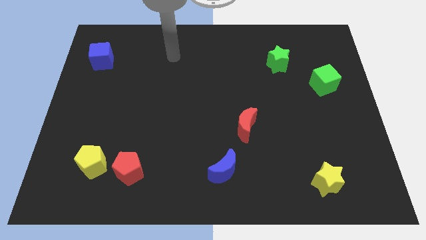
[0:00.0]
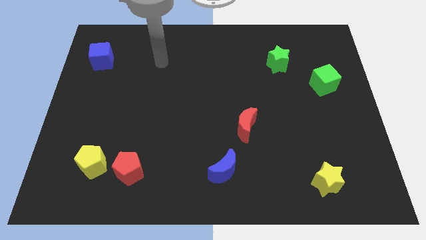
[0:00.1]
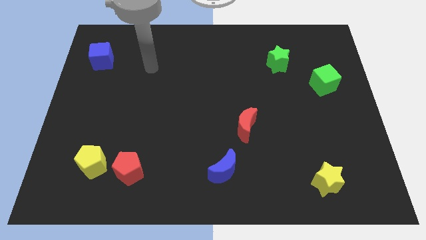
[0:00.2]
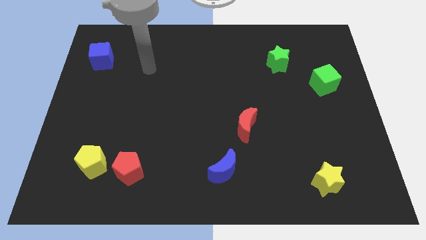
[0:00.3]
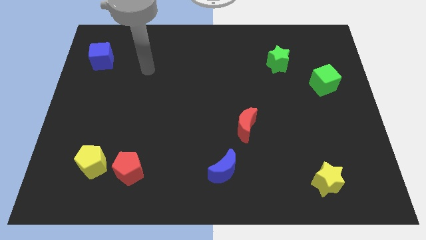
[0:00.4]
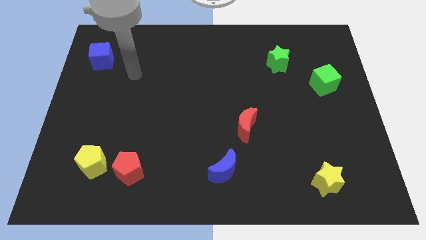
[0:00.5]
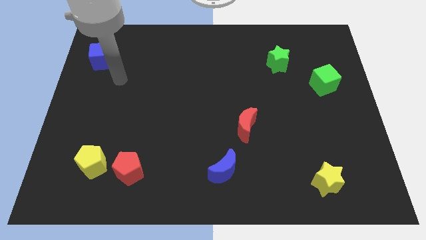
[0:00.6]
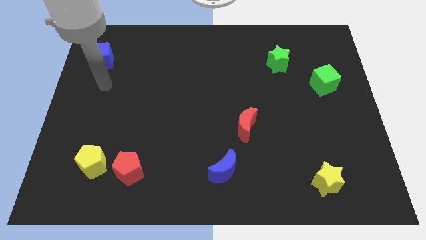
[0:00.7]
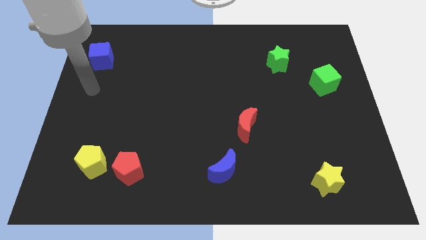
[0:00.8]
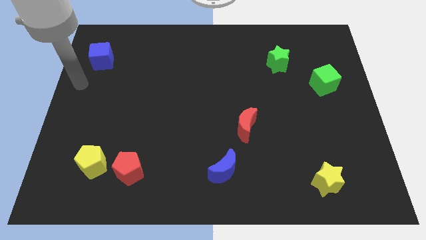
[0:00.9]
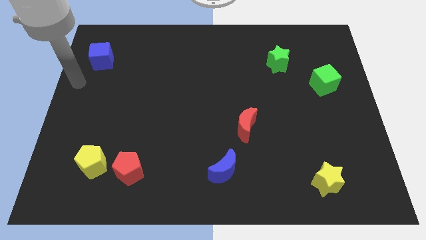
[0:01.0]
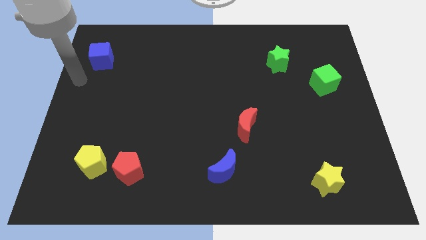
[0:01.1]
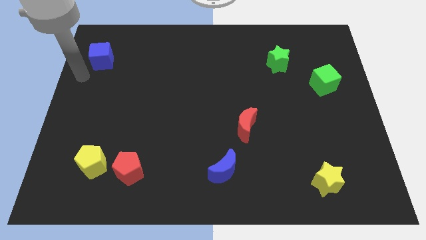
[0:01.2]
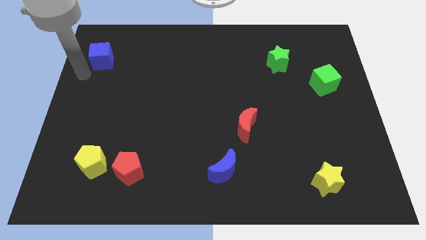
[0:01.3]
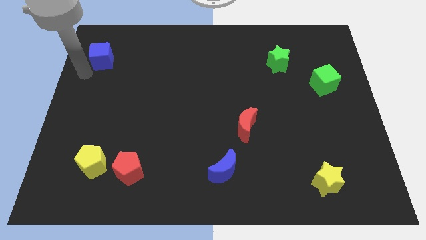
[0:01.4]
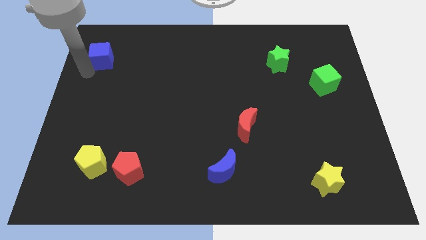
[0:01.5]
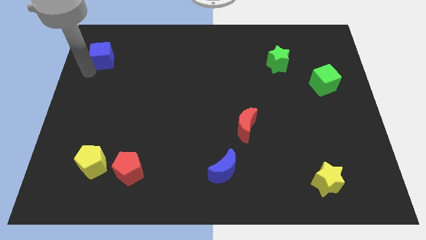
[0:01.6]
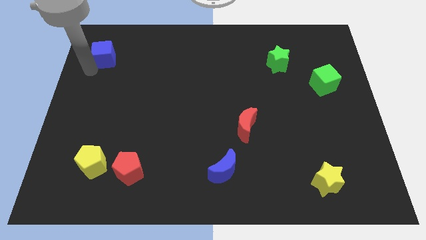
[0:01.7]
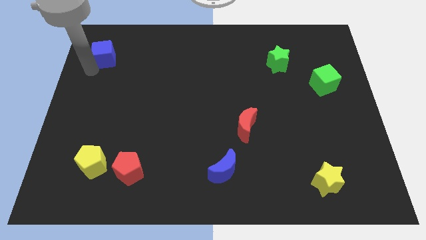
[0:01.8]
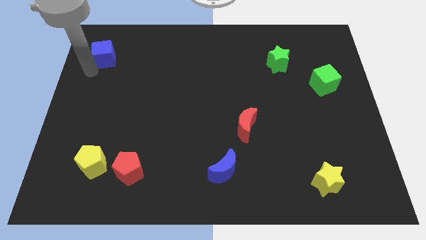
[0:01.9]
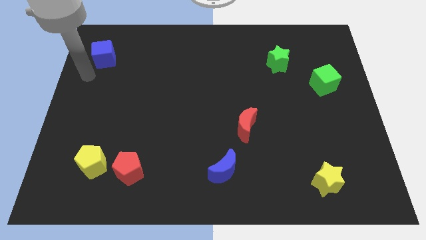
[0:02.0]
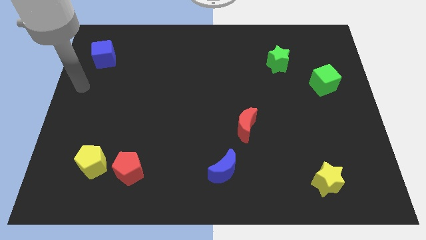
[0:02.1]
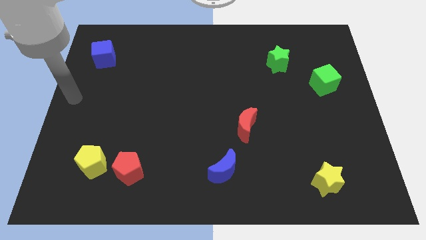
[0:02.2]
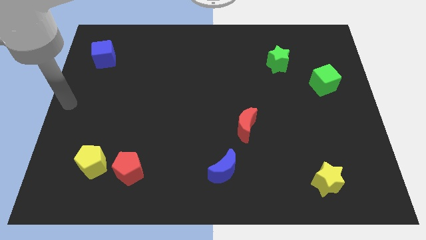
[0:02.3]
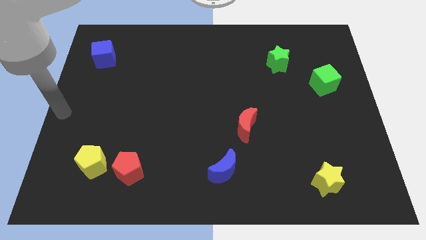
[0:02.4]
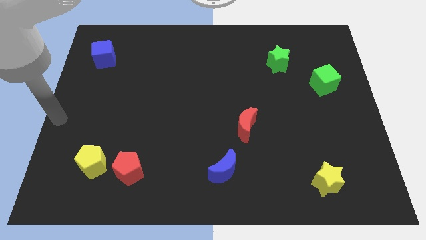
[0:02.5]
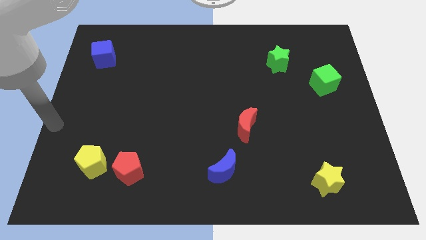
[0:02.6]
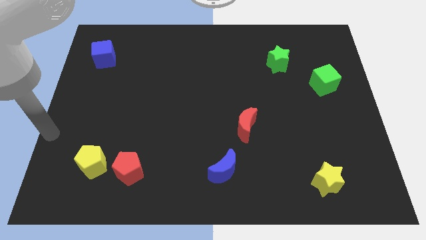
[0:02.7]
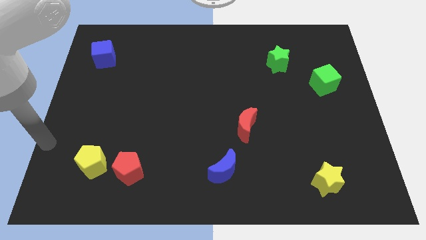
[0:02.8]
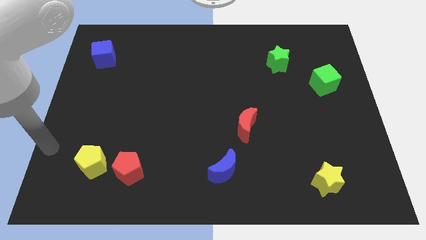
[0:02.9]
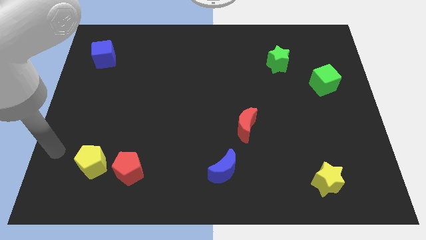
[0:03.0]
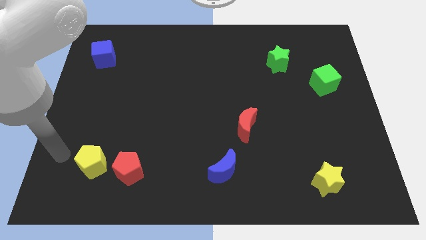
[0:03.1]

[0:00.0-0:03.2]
slightly push the blue cube towards the top side and move away

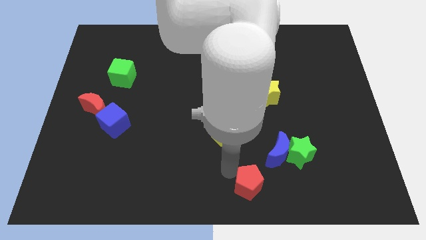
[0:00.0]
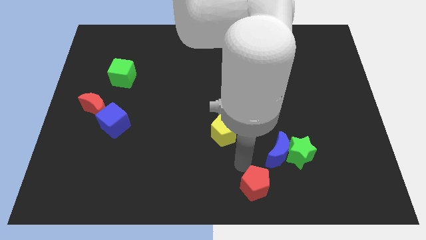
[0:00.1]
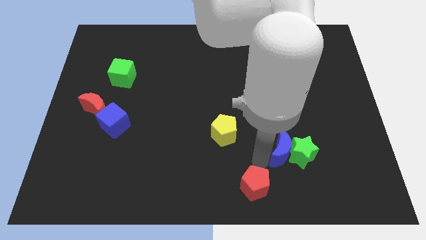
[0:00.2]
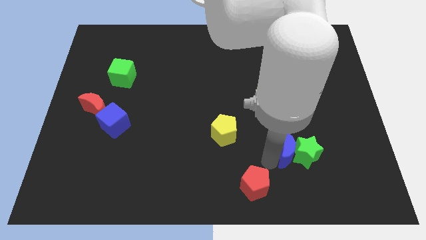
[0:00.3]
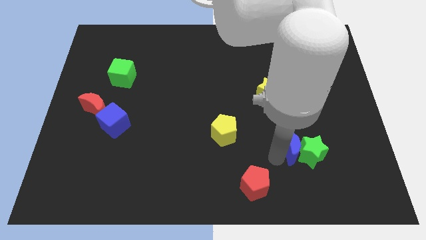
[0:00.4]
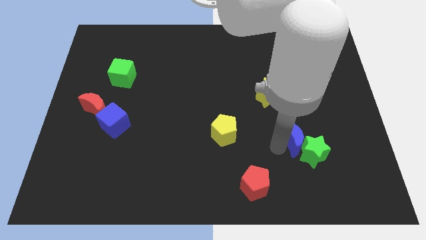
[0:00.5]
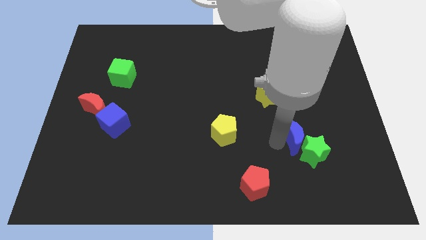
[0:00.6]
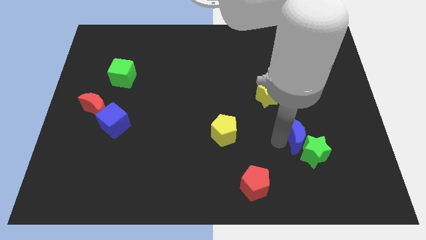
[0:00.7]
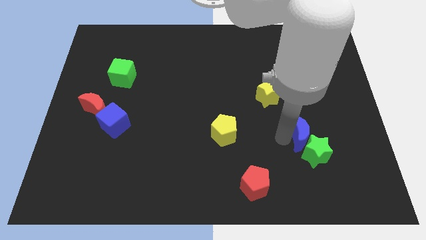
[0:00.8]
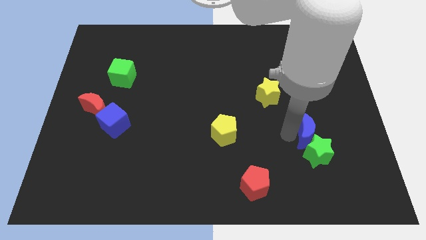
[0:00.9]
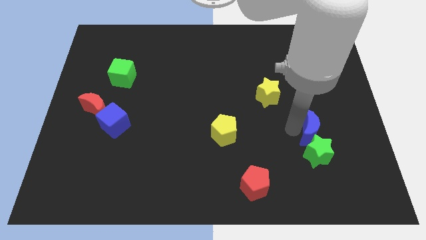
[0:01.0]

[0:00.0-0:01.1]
place the blue moon below the yellow star

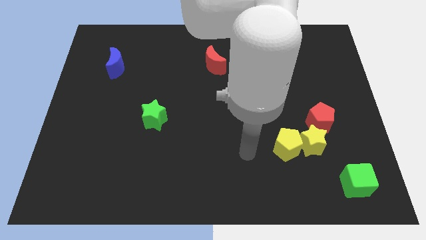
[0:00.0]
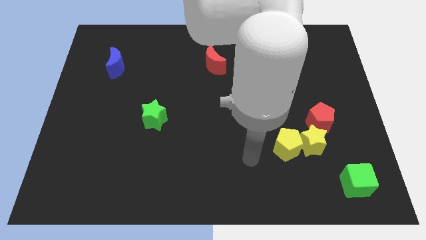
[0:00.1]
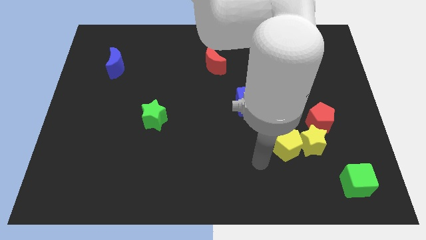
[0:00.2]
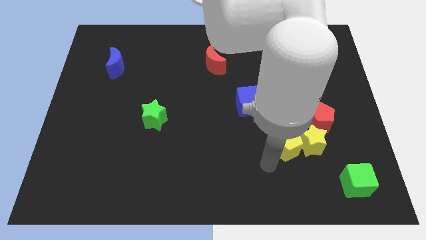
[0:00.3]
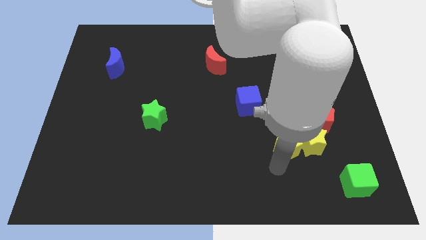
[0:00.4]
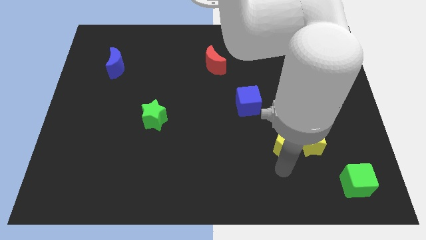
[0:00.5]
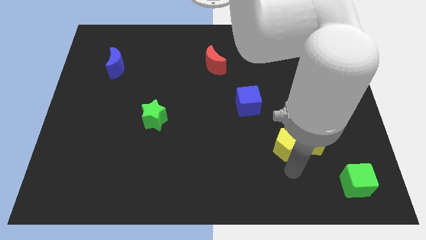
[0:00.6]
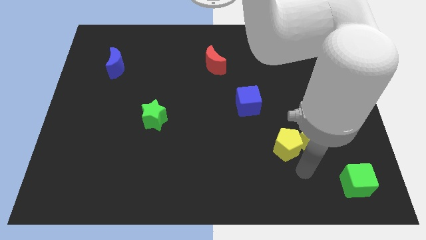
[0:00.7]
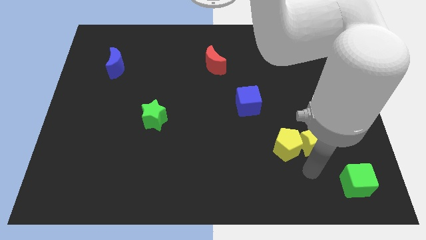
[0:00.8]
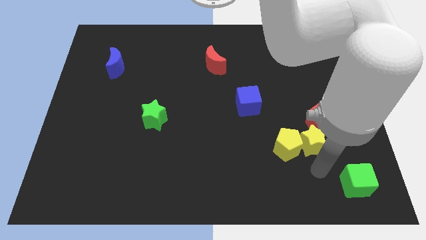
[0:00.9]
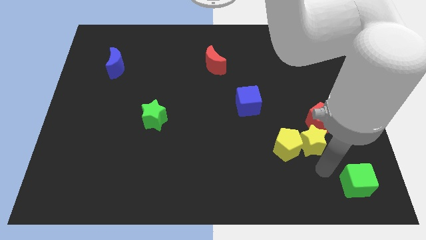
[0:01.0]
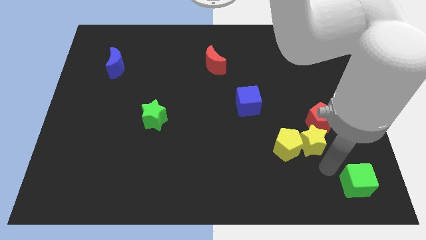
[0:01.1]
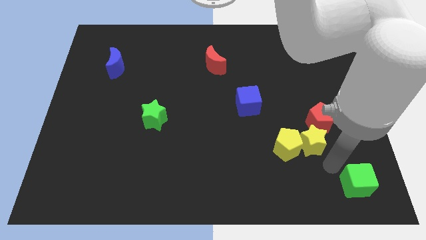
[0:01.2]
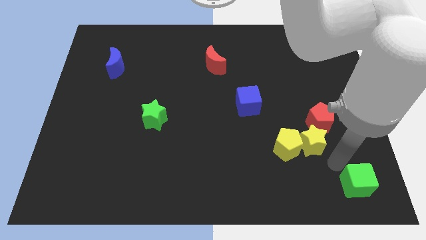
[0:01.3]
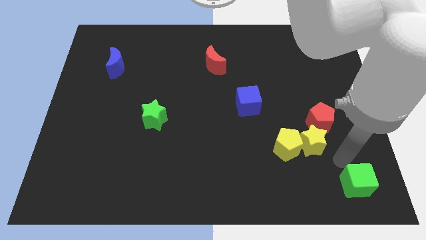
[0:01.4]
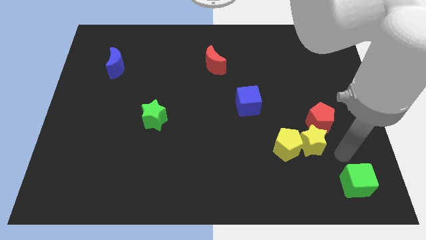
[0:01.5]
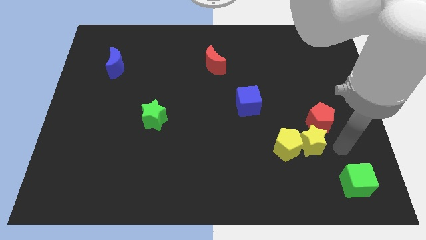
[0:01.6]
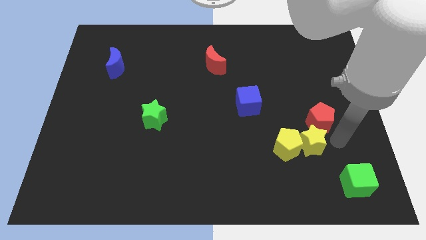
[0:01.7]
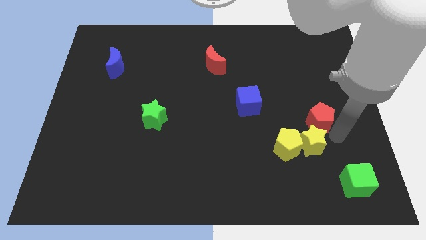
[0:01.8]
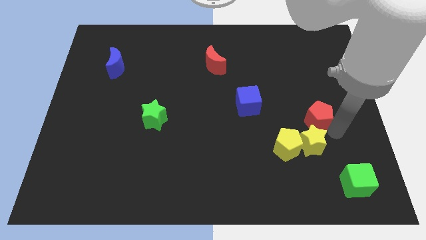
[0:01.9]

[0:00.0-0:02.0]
move your arm arm towards the red pentagon

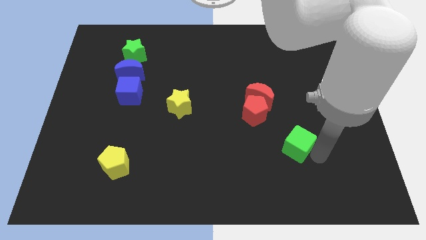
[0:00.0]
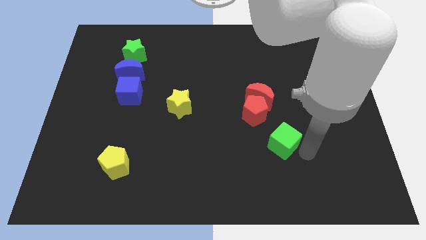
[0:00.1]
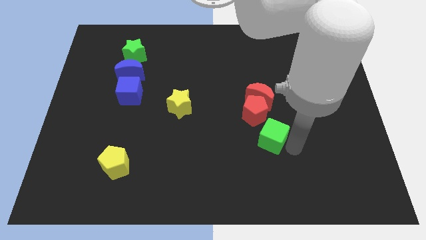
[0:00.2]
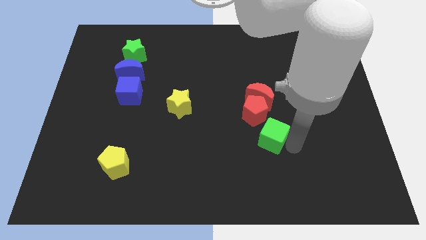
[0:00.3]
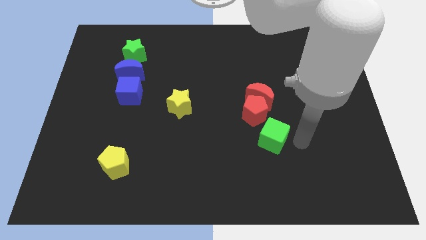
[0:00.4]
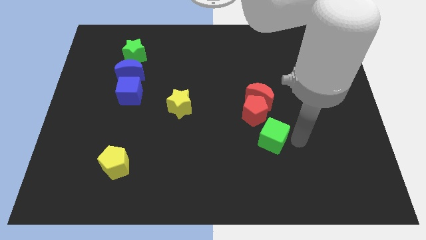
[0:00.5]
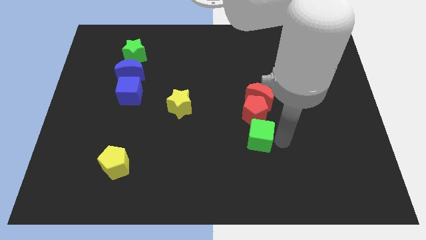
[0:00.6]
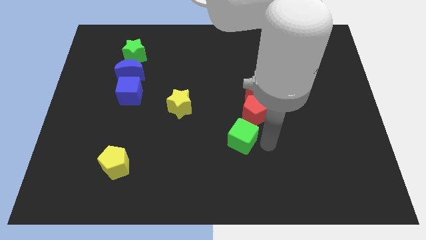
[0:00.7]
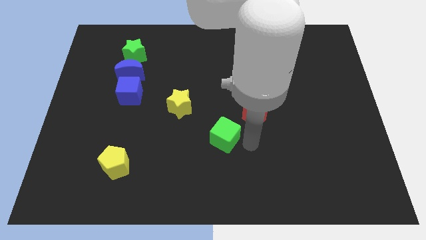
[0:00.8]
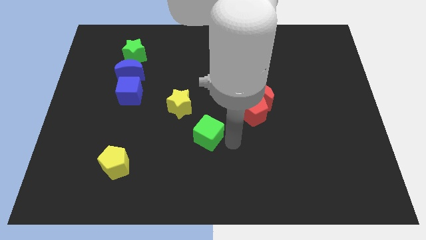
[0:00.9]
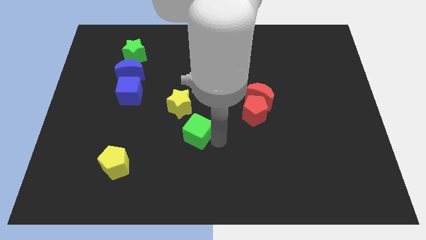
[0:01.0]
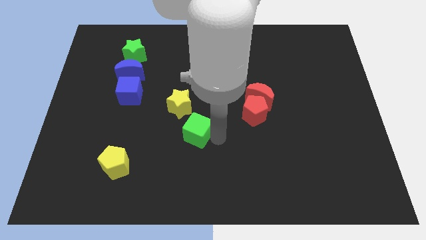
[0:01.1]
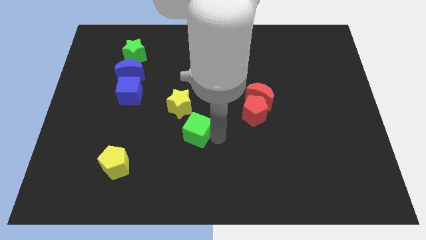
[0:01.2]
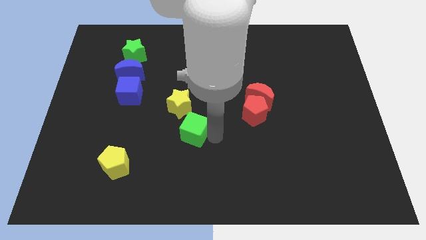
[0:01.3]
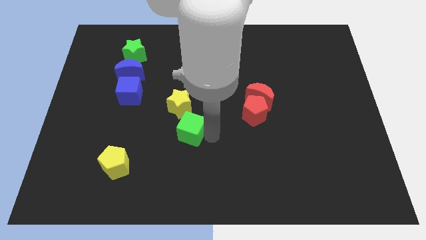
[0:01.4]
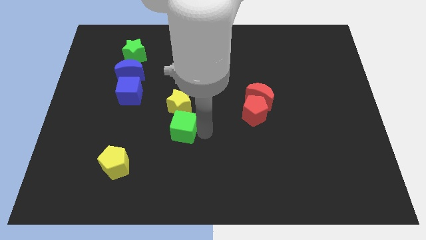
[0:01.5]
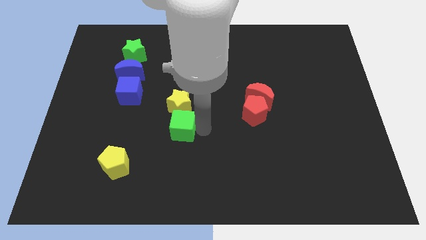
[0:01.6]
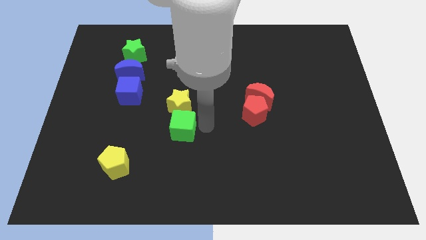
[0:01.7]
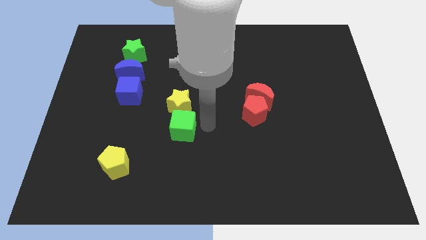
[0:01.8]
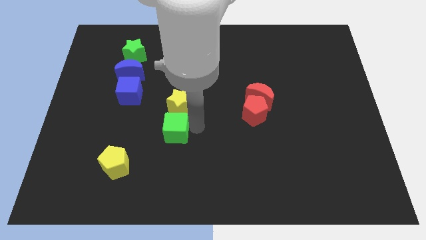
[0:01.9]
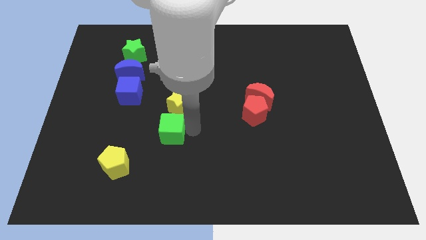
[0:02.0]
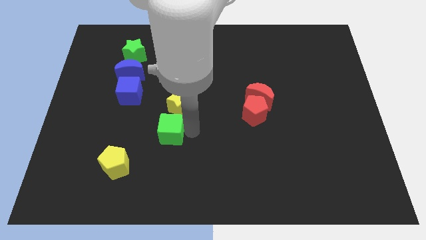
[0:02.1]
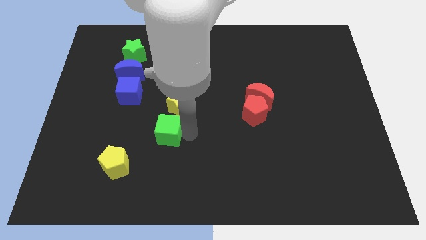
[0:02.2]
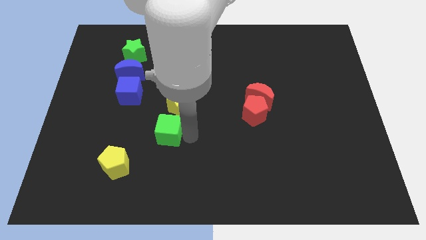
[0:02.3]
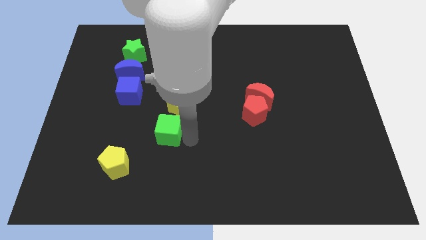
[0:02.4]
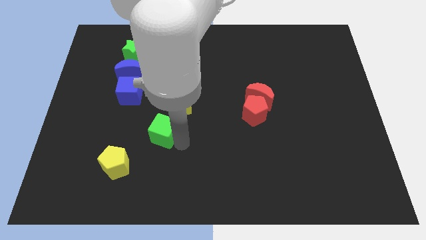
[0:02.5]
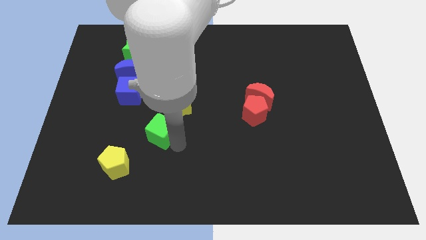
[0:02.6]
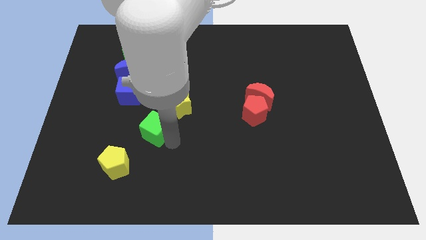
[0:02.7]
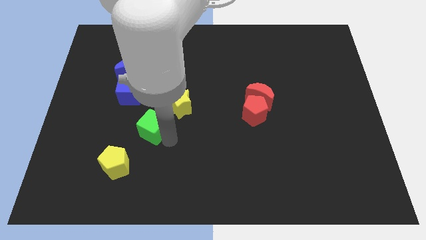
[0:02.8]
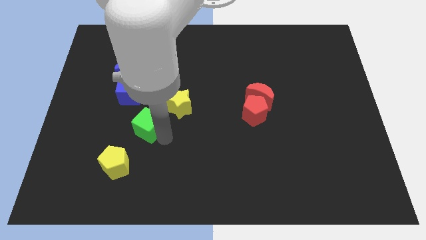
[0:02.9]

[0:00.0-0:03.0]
place the green cube below the yellow star
